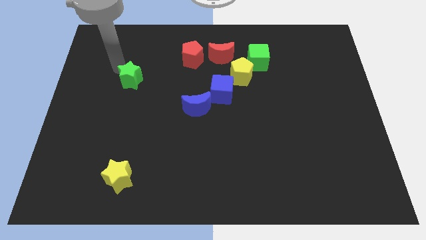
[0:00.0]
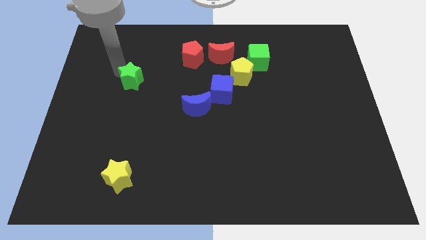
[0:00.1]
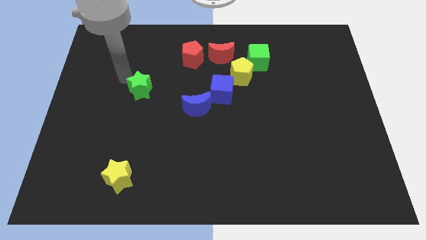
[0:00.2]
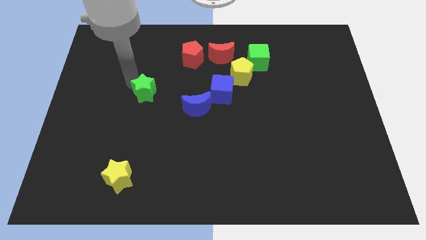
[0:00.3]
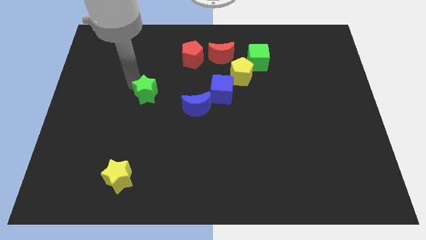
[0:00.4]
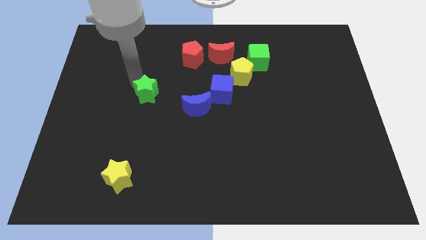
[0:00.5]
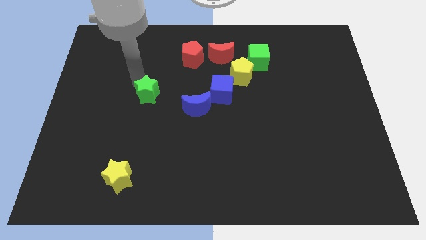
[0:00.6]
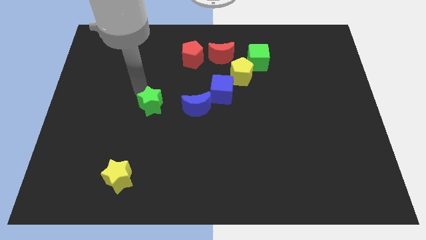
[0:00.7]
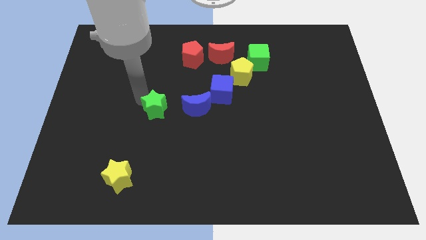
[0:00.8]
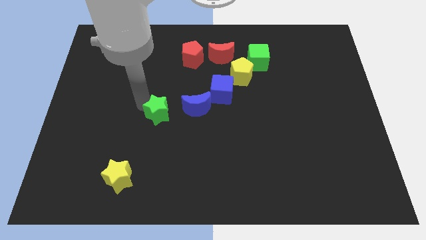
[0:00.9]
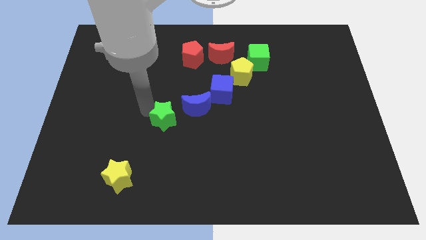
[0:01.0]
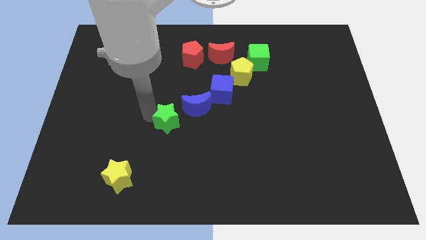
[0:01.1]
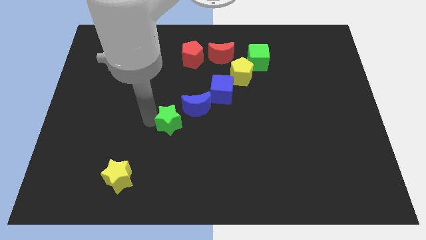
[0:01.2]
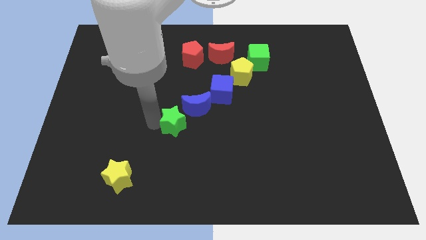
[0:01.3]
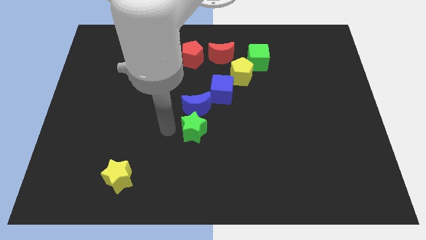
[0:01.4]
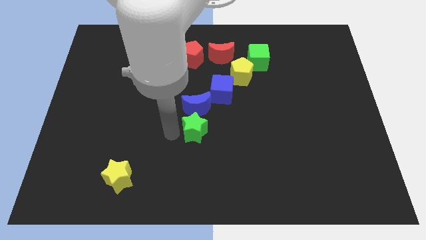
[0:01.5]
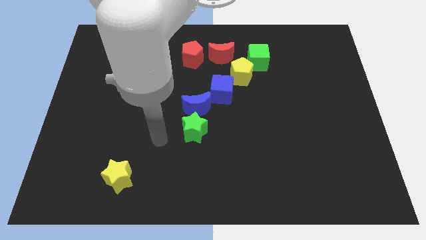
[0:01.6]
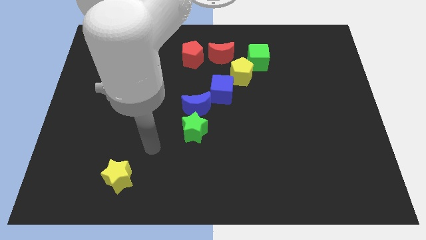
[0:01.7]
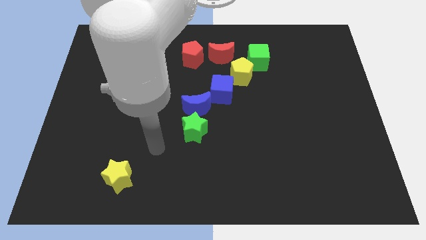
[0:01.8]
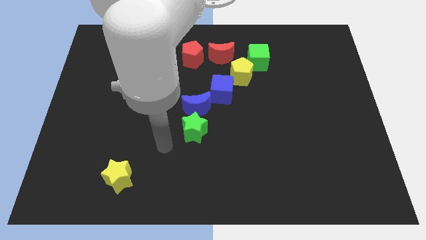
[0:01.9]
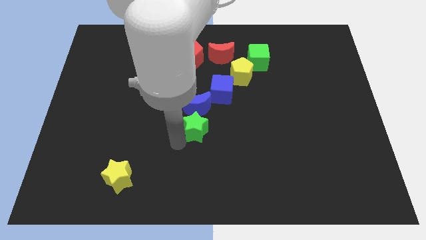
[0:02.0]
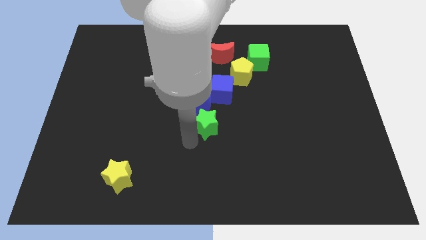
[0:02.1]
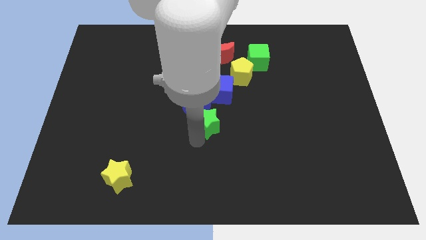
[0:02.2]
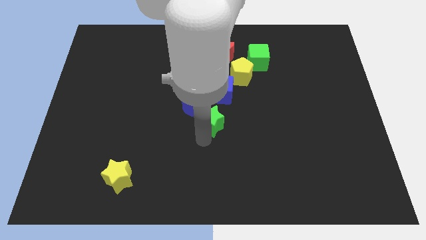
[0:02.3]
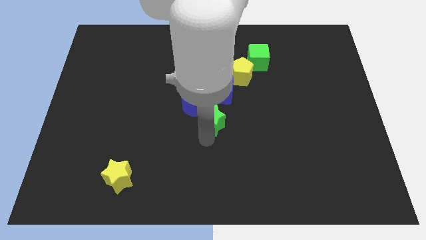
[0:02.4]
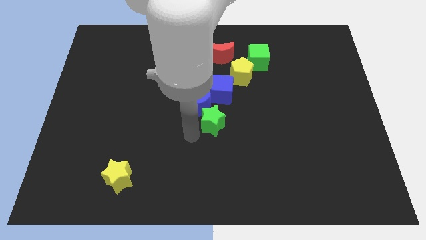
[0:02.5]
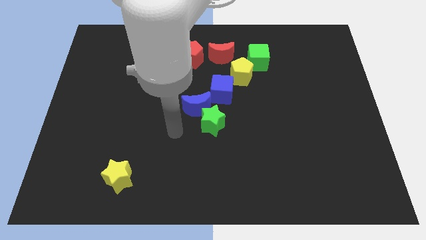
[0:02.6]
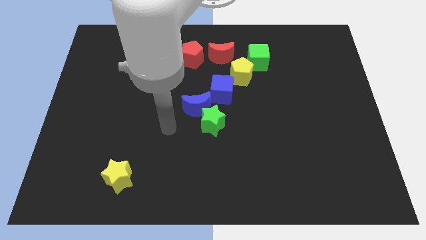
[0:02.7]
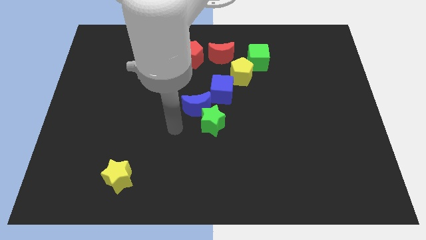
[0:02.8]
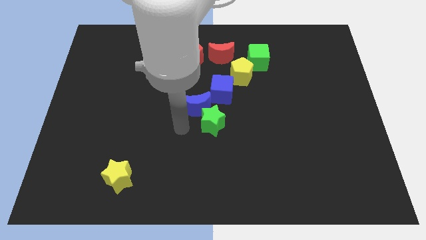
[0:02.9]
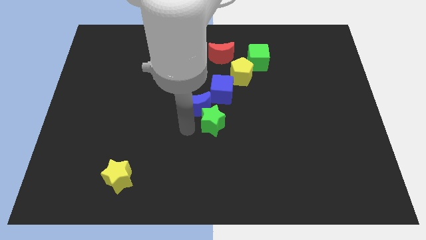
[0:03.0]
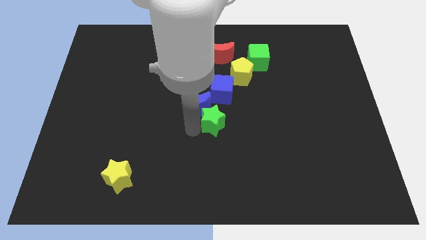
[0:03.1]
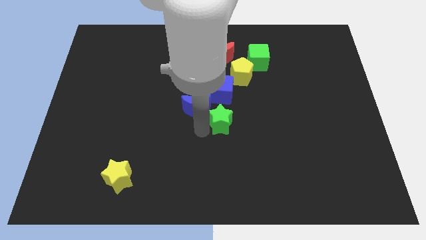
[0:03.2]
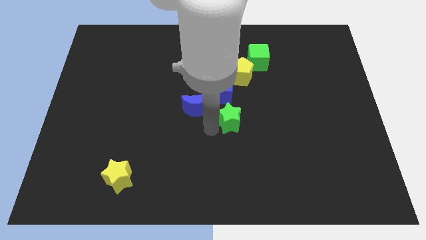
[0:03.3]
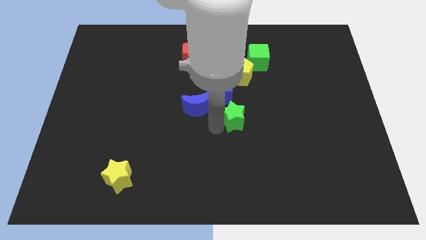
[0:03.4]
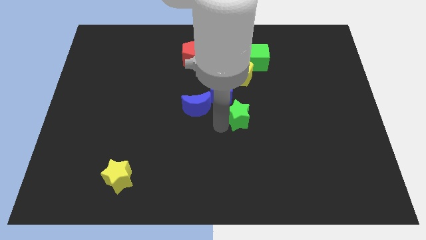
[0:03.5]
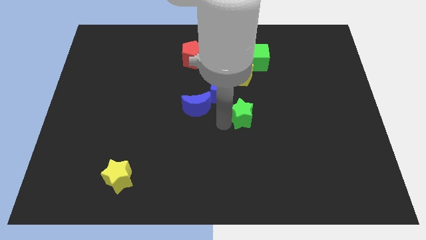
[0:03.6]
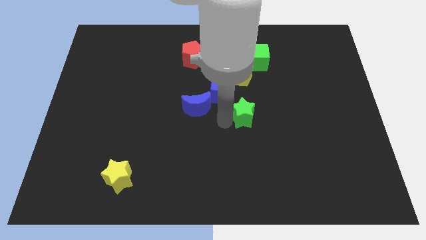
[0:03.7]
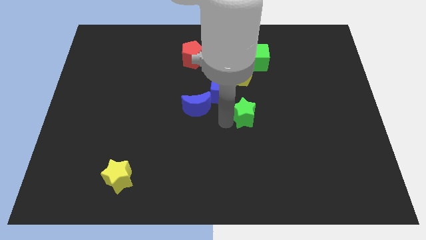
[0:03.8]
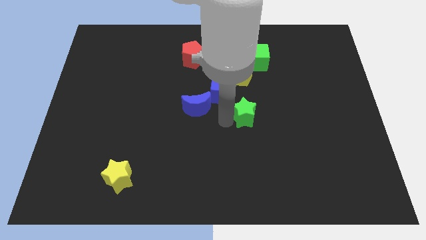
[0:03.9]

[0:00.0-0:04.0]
move the green star to the bottom of the yellow pentagon

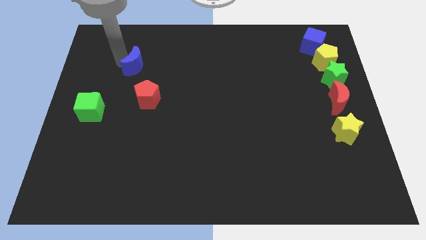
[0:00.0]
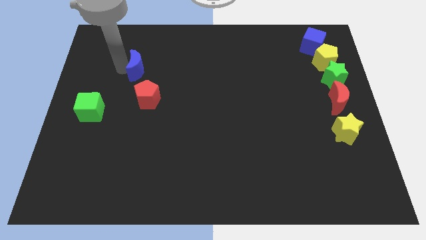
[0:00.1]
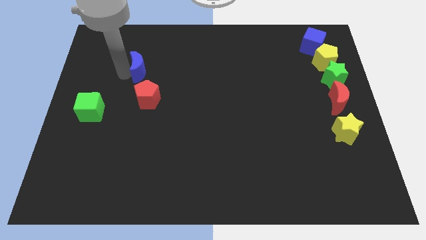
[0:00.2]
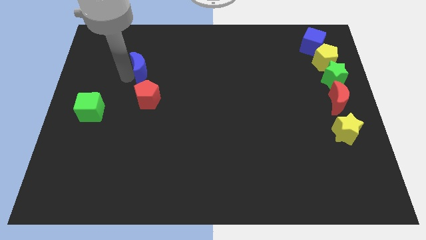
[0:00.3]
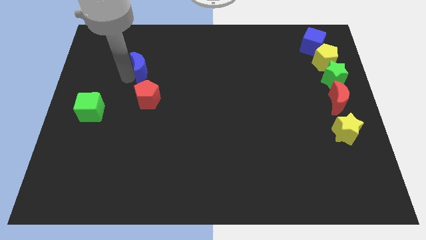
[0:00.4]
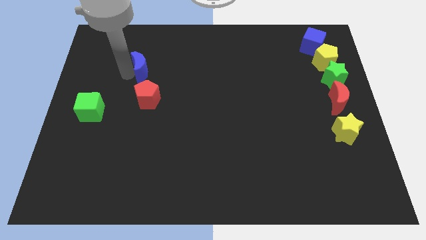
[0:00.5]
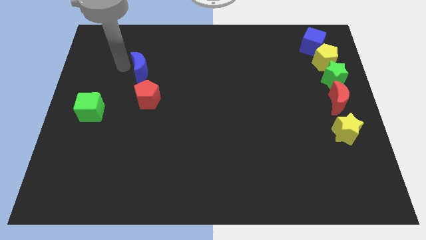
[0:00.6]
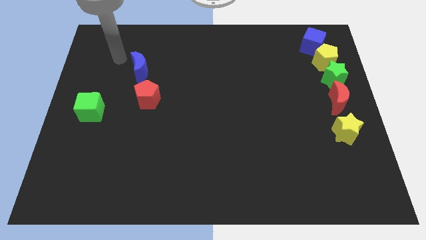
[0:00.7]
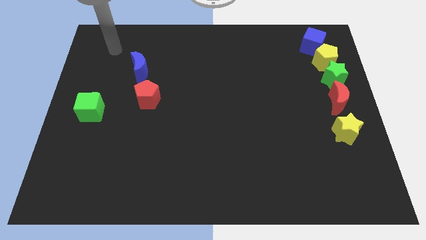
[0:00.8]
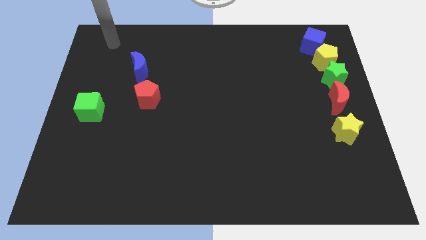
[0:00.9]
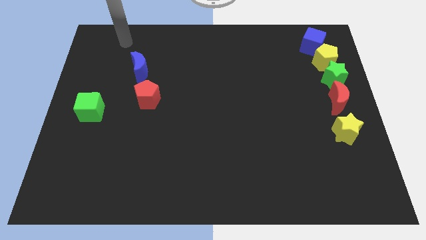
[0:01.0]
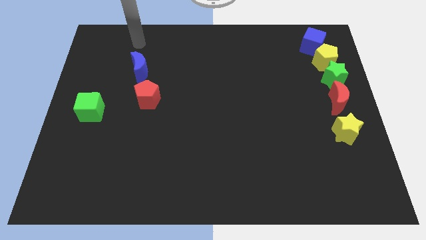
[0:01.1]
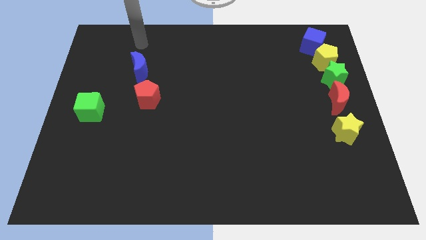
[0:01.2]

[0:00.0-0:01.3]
place the blue moon above the red pentagon

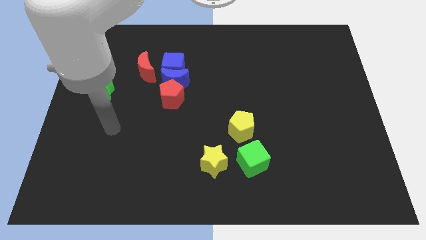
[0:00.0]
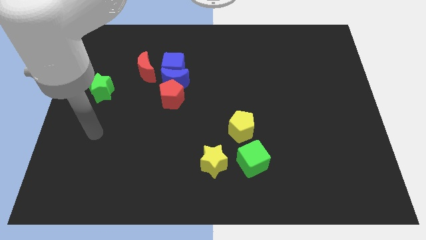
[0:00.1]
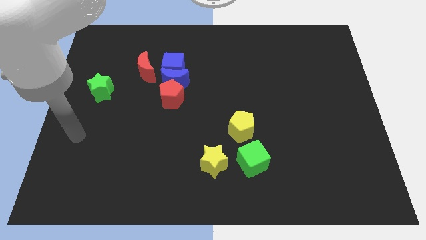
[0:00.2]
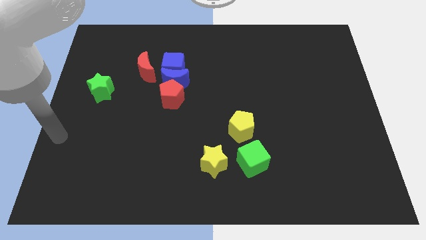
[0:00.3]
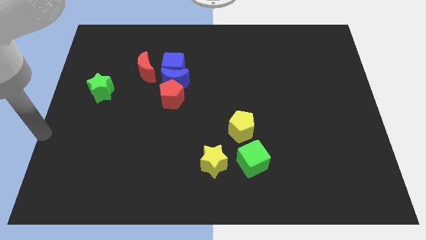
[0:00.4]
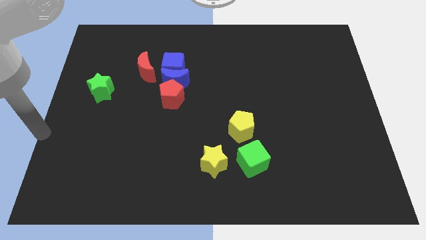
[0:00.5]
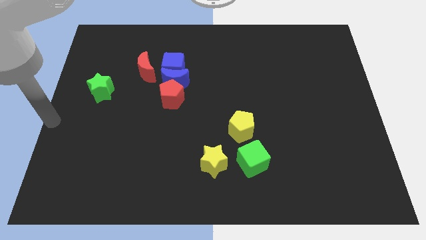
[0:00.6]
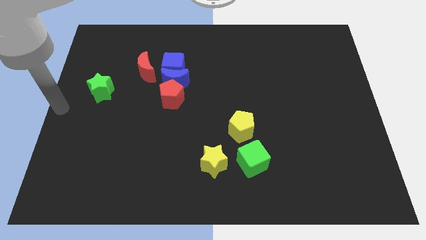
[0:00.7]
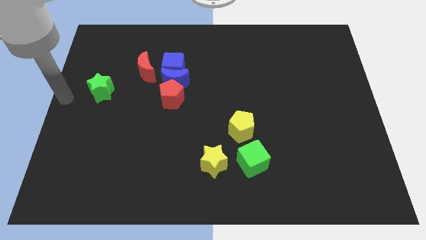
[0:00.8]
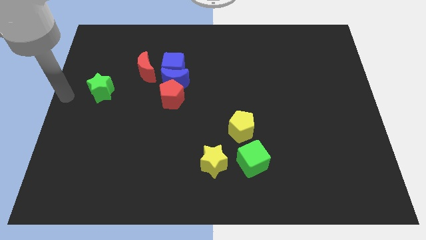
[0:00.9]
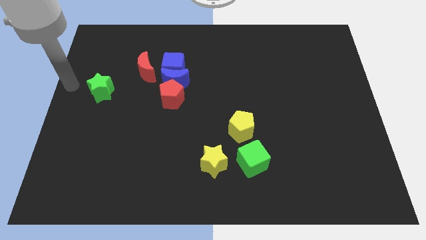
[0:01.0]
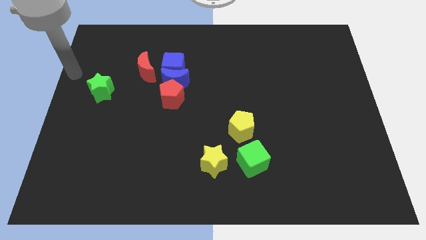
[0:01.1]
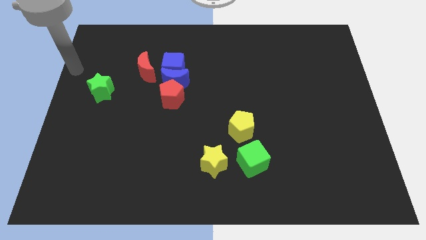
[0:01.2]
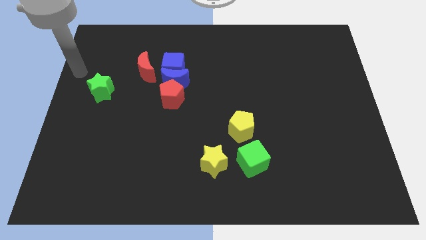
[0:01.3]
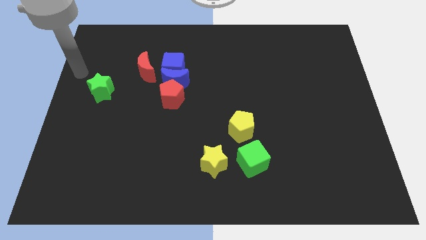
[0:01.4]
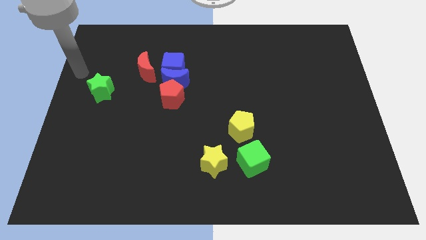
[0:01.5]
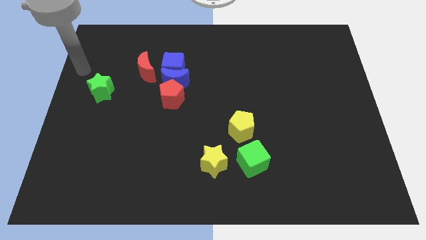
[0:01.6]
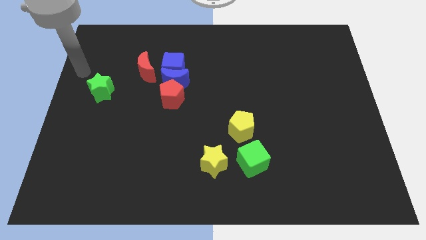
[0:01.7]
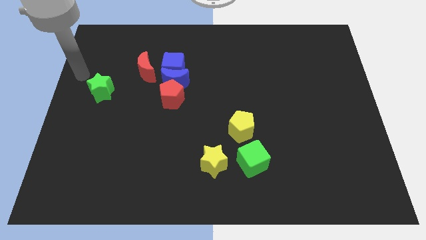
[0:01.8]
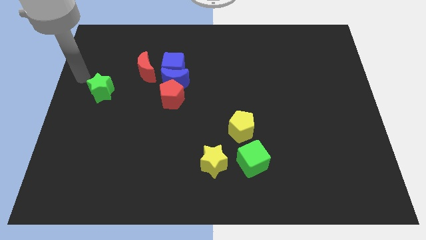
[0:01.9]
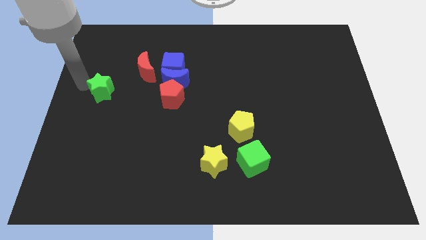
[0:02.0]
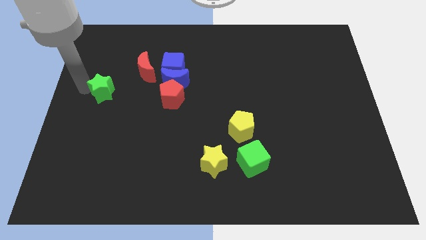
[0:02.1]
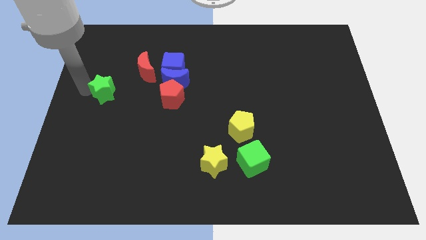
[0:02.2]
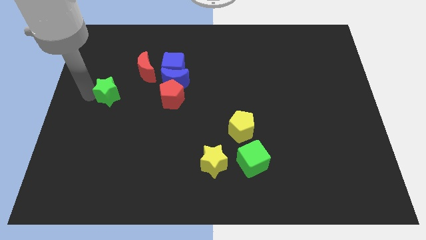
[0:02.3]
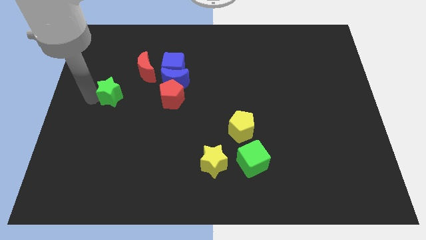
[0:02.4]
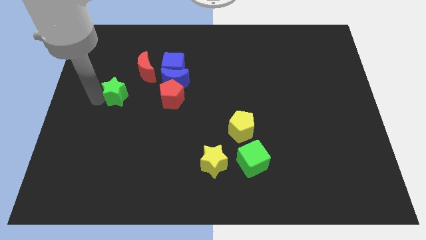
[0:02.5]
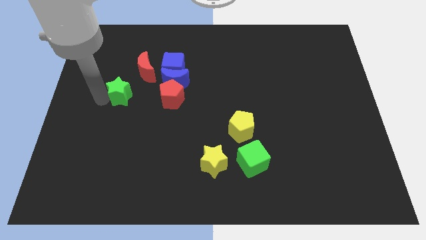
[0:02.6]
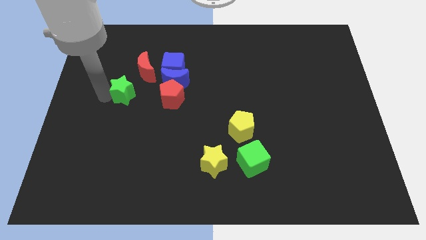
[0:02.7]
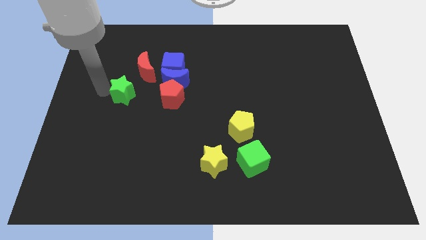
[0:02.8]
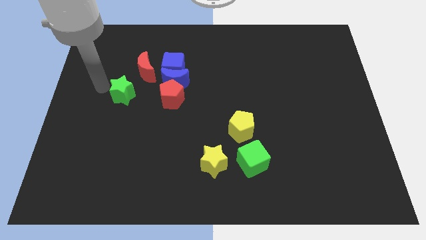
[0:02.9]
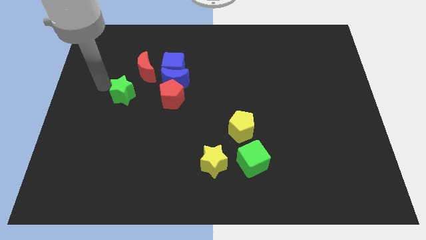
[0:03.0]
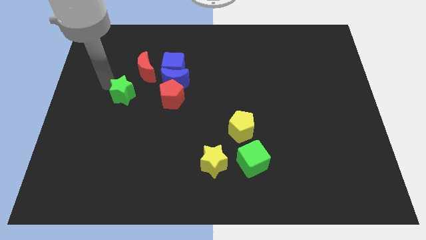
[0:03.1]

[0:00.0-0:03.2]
place green star to the left of red pentagon

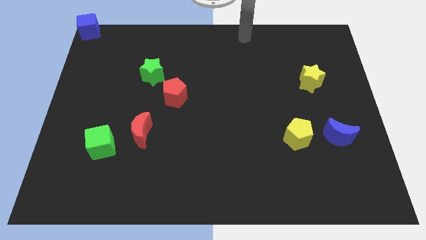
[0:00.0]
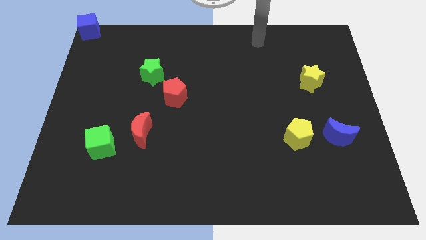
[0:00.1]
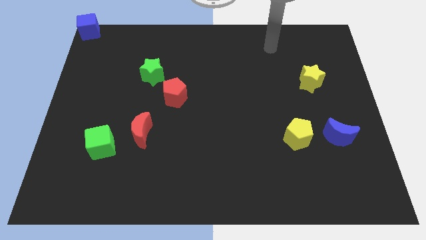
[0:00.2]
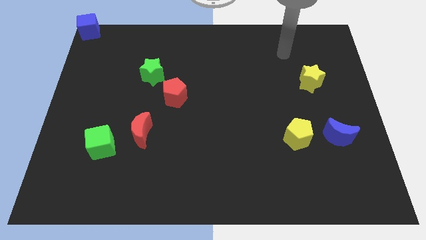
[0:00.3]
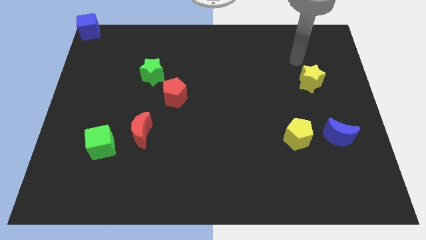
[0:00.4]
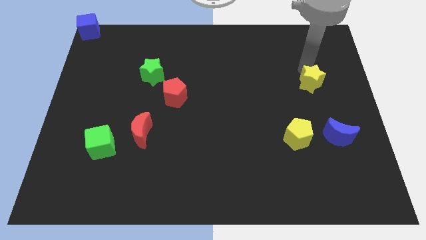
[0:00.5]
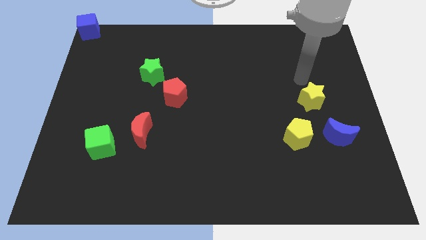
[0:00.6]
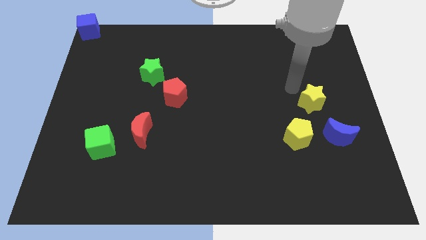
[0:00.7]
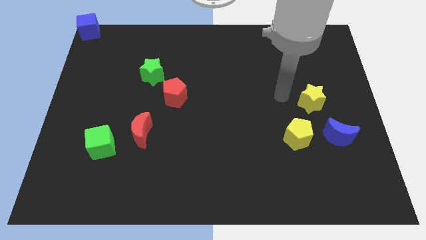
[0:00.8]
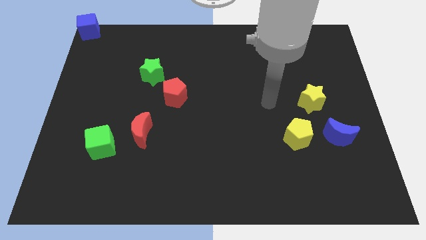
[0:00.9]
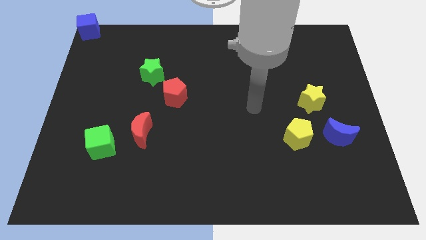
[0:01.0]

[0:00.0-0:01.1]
push the yellow star to the center top of the yellow pentagon and blue moon
